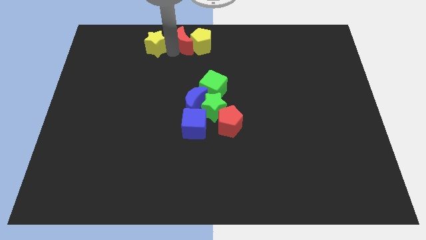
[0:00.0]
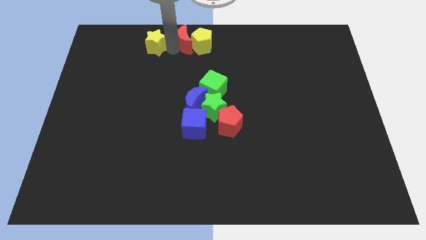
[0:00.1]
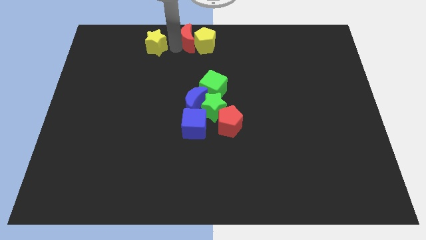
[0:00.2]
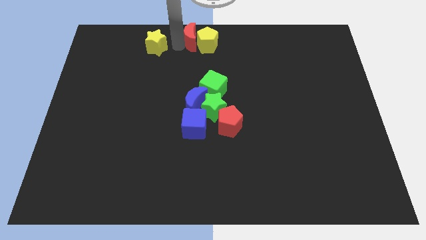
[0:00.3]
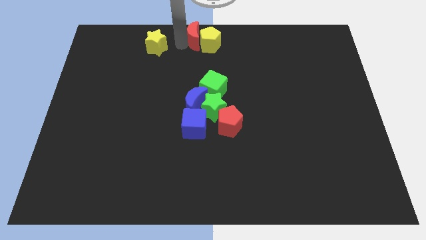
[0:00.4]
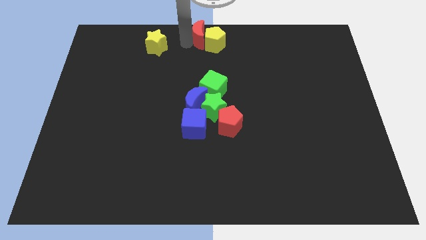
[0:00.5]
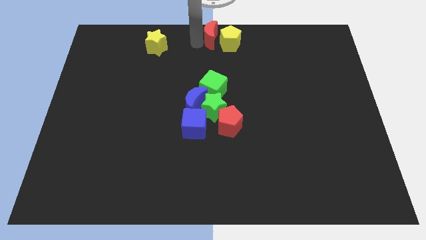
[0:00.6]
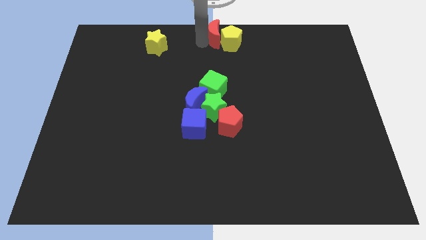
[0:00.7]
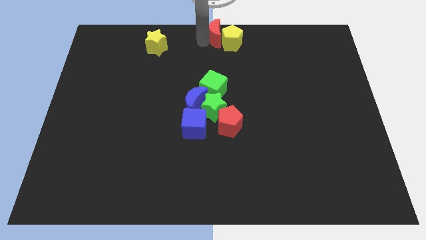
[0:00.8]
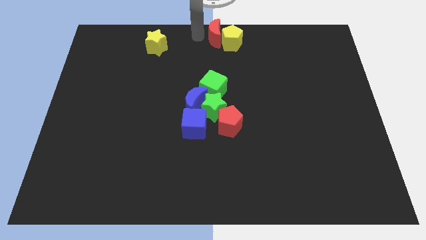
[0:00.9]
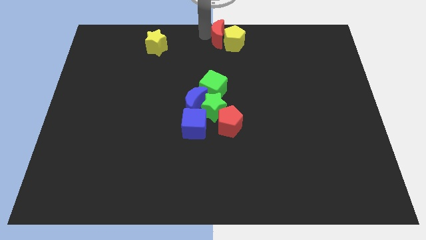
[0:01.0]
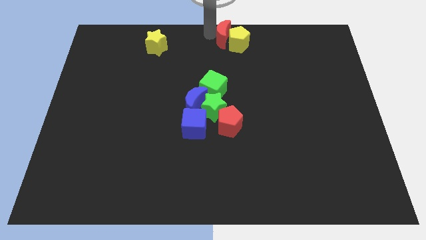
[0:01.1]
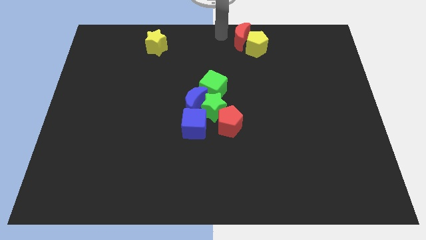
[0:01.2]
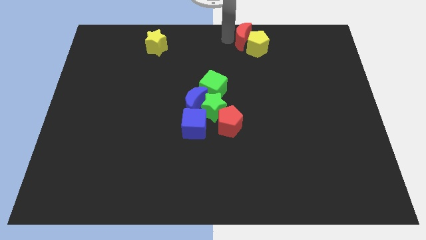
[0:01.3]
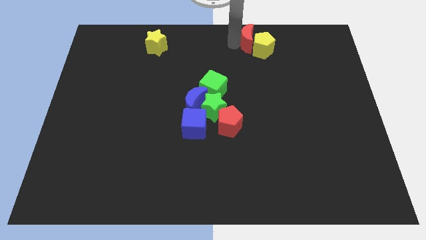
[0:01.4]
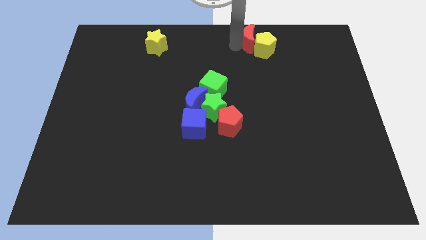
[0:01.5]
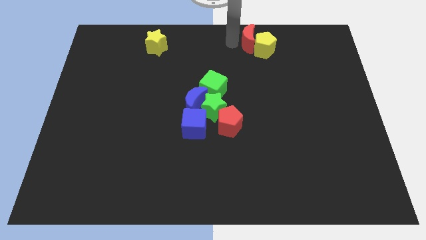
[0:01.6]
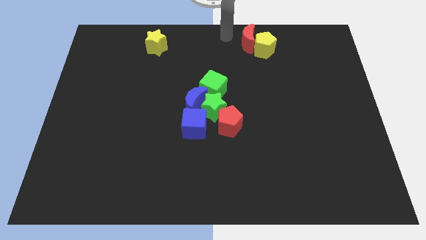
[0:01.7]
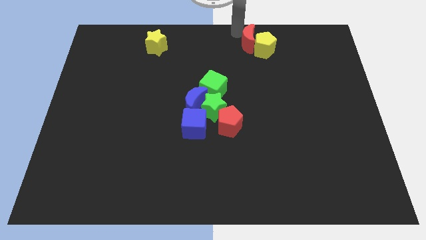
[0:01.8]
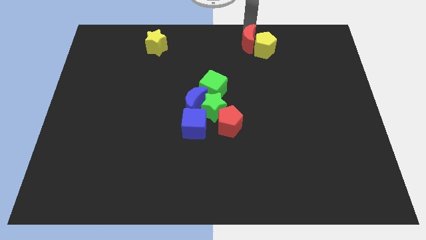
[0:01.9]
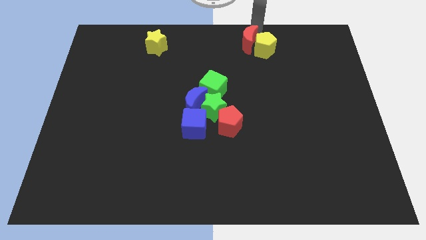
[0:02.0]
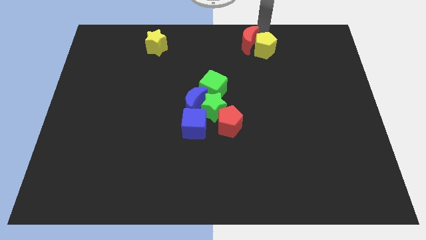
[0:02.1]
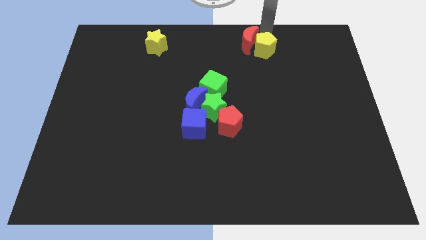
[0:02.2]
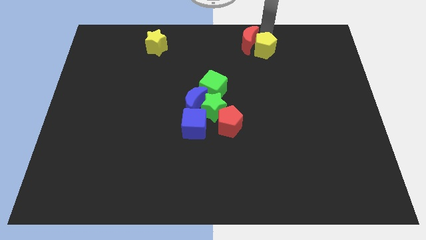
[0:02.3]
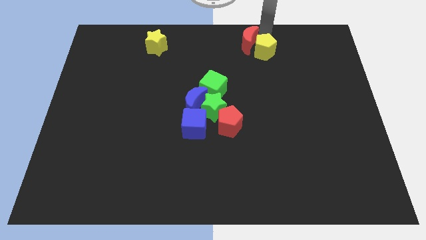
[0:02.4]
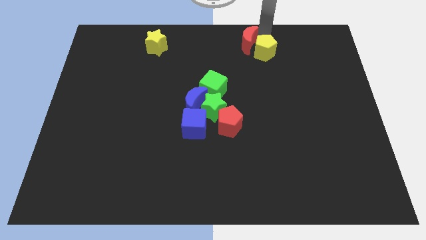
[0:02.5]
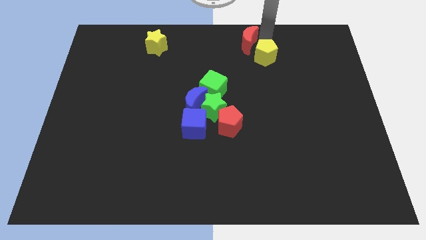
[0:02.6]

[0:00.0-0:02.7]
move the red moon and yellow pentagon slightly right

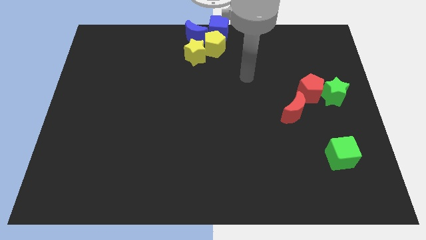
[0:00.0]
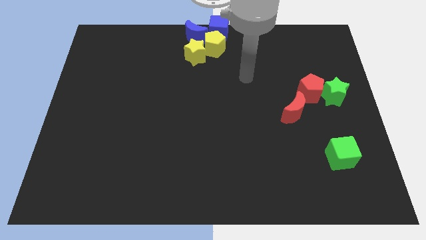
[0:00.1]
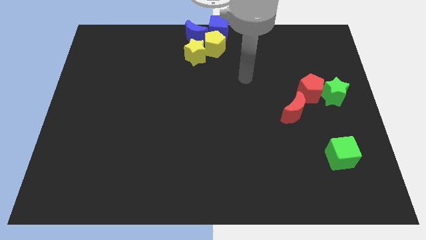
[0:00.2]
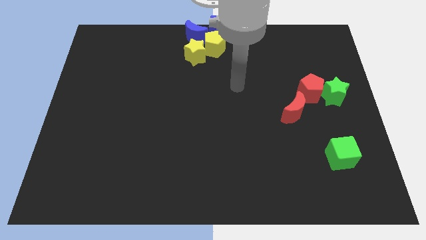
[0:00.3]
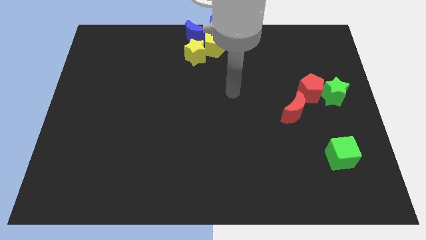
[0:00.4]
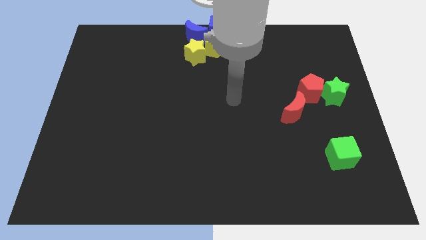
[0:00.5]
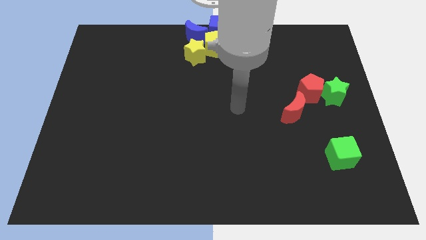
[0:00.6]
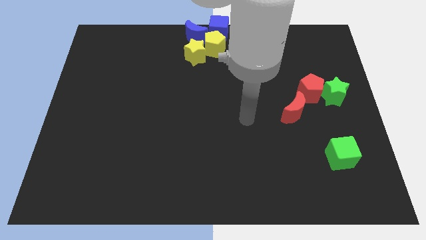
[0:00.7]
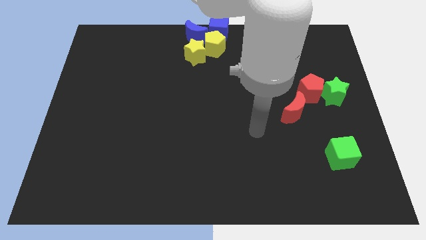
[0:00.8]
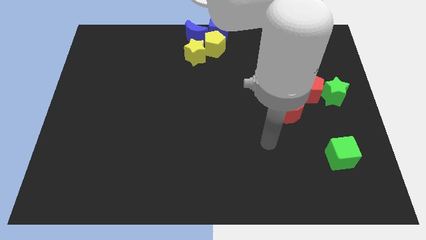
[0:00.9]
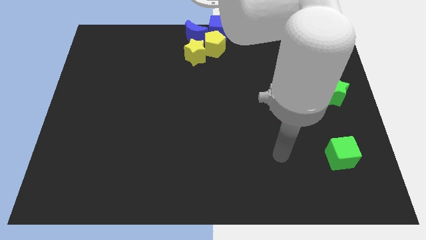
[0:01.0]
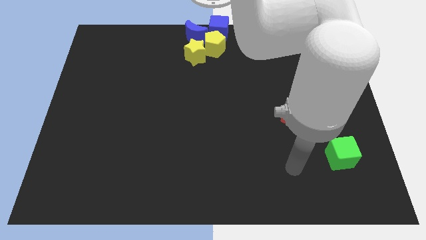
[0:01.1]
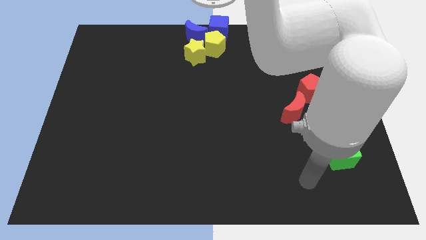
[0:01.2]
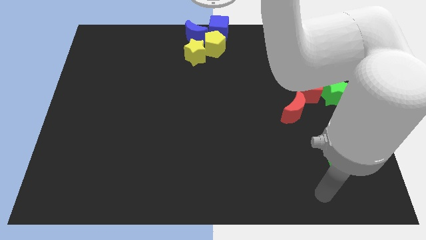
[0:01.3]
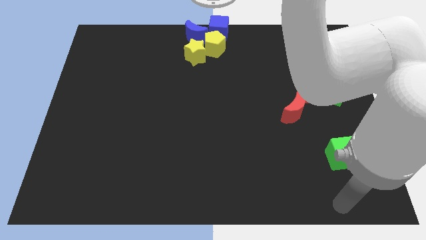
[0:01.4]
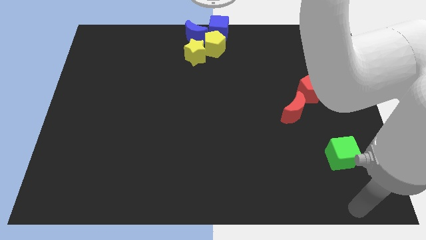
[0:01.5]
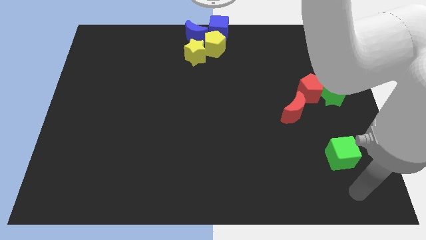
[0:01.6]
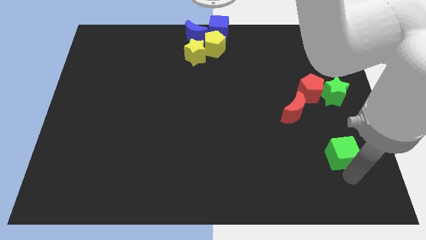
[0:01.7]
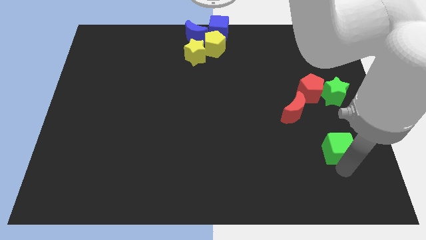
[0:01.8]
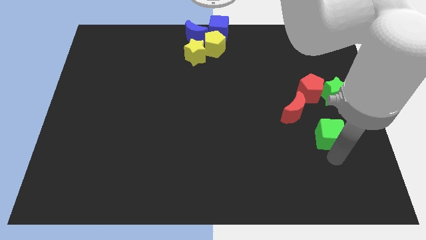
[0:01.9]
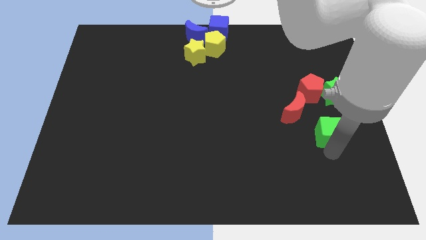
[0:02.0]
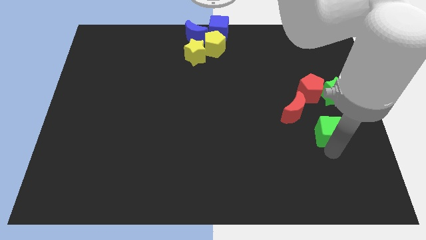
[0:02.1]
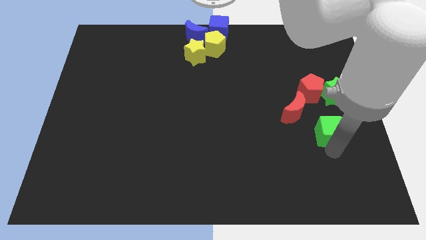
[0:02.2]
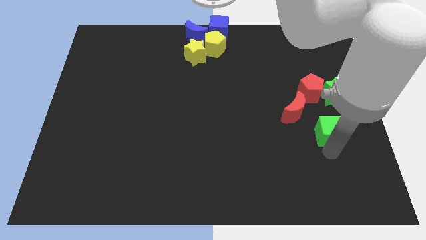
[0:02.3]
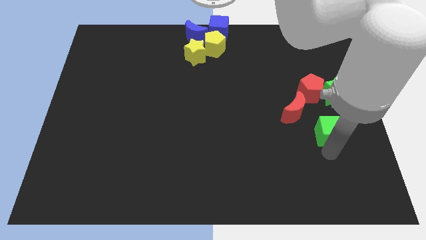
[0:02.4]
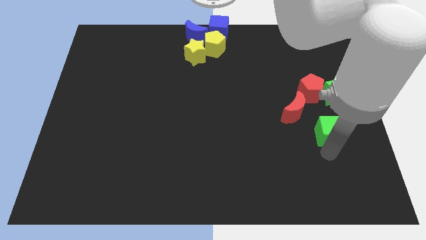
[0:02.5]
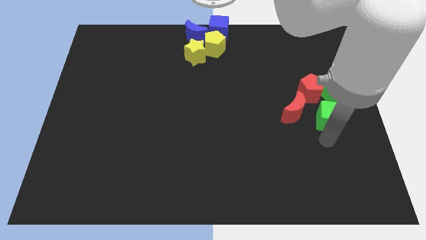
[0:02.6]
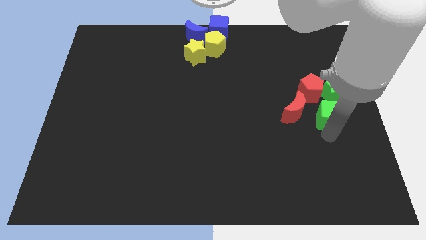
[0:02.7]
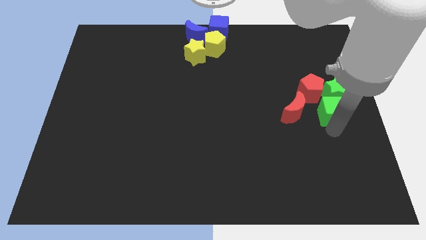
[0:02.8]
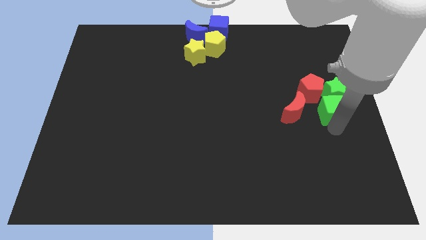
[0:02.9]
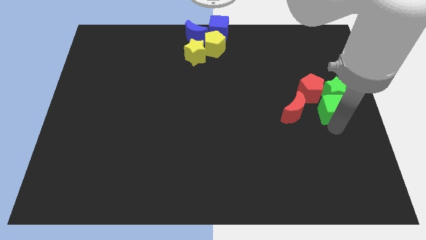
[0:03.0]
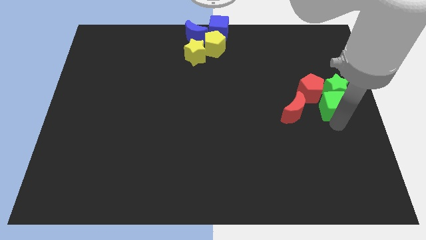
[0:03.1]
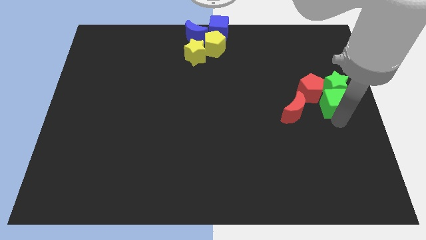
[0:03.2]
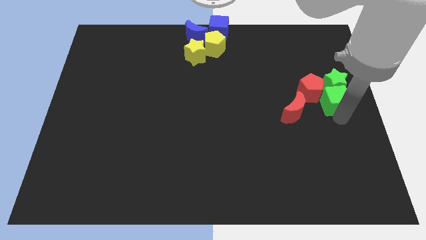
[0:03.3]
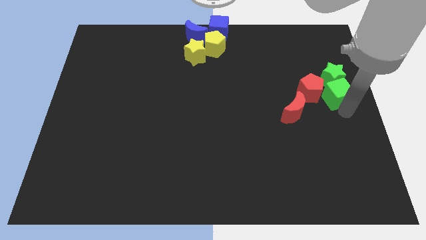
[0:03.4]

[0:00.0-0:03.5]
push the green cube below the green star

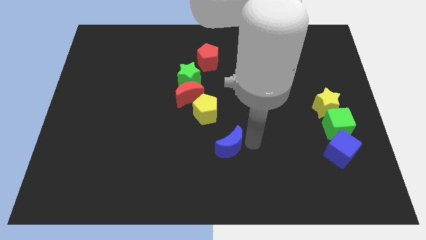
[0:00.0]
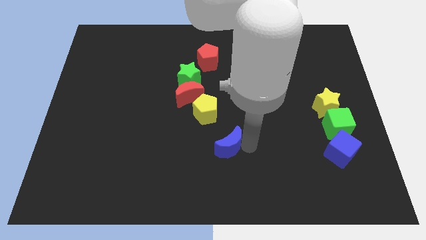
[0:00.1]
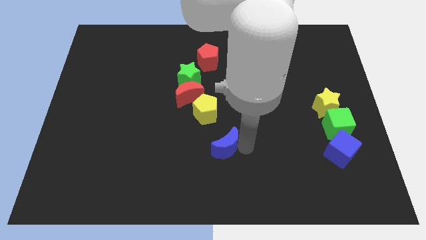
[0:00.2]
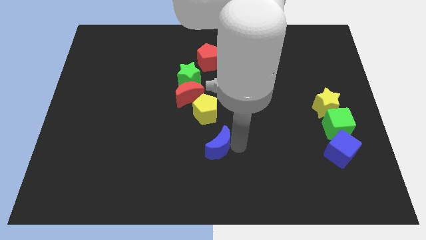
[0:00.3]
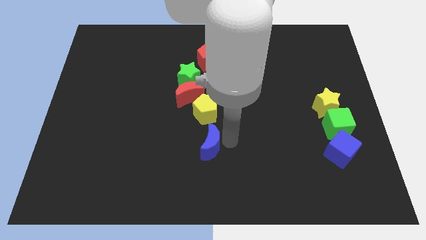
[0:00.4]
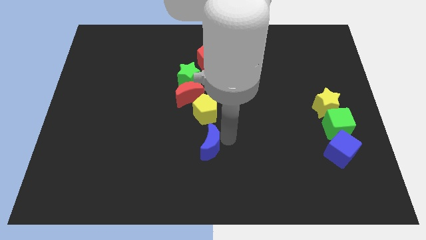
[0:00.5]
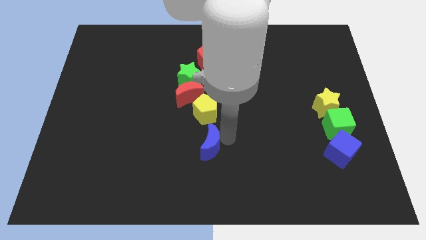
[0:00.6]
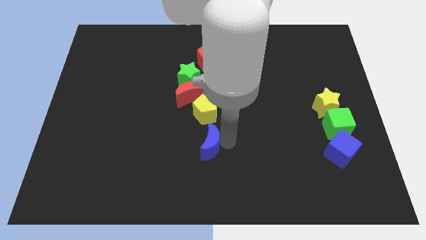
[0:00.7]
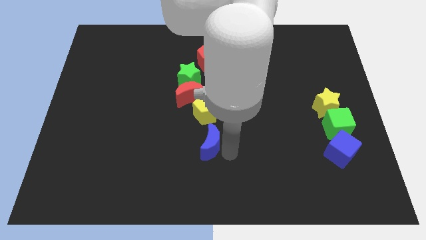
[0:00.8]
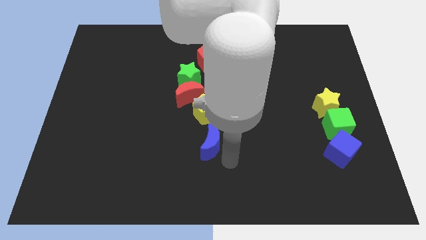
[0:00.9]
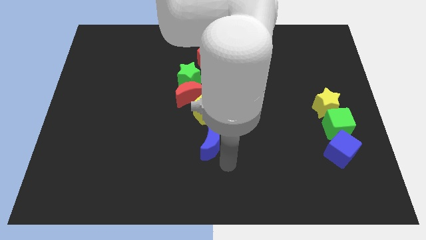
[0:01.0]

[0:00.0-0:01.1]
move the blue crescent below the yellow pentagon

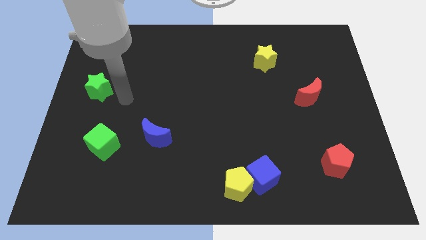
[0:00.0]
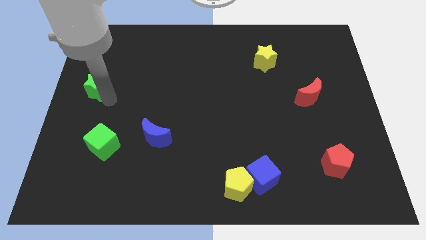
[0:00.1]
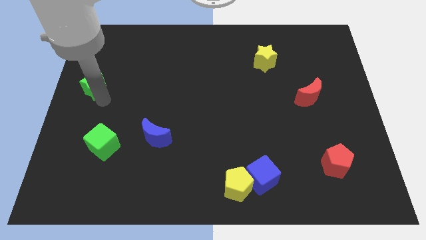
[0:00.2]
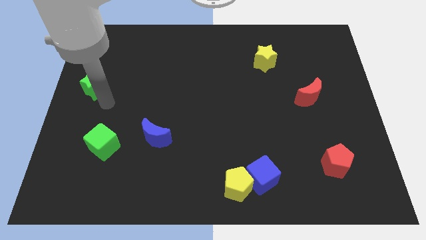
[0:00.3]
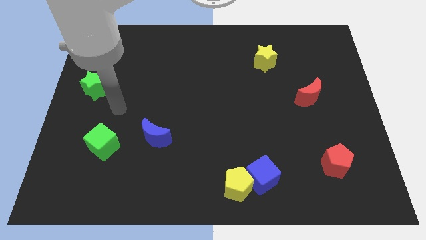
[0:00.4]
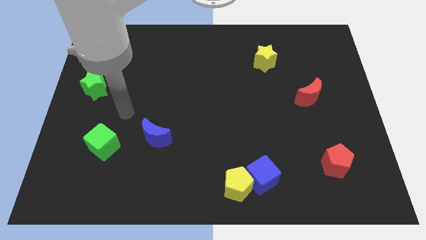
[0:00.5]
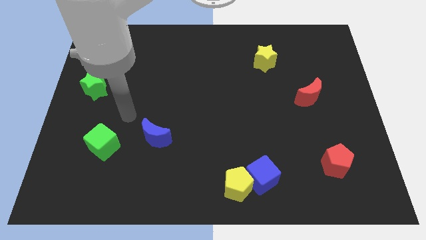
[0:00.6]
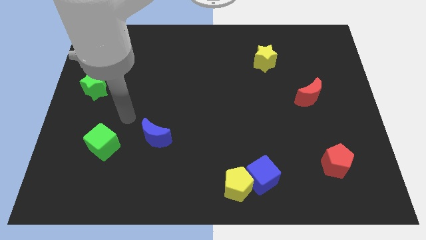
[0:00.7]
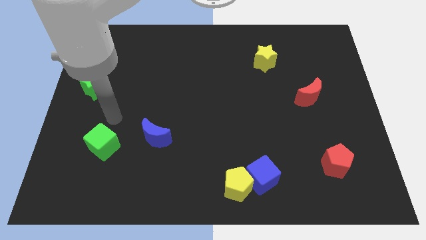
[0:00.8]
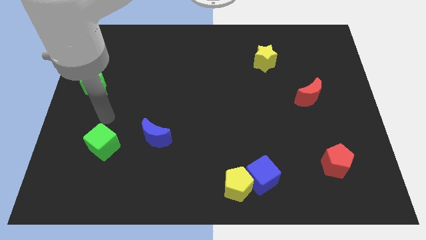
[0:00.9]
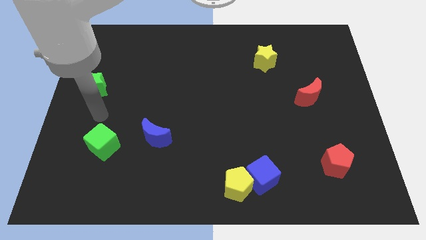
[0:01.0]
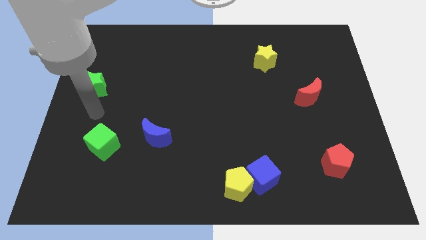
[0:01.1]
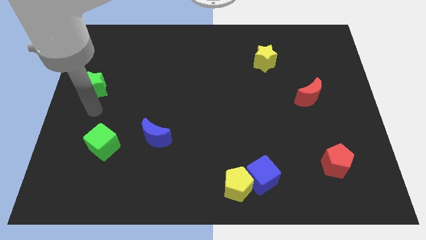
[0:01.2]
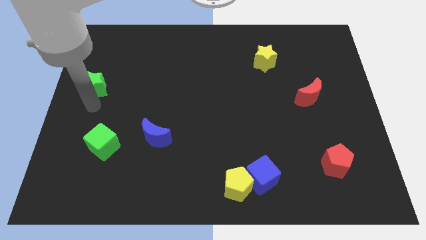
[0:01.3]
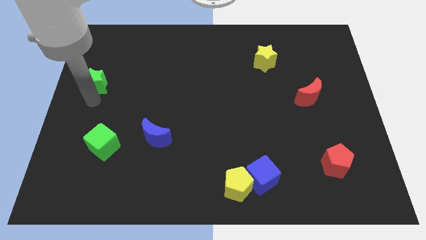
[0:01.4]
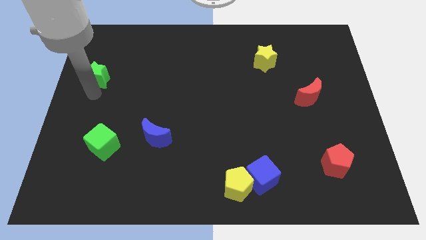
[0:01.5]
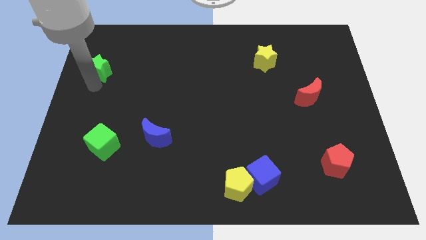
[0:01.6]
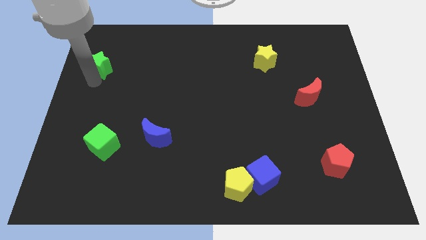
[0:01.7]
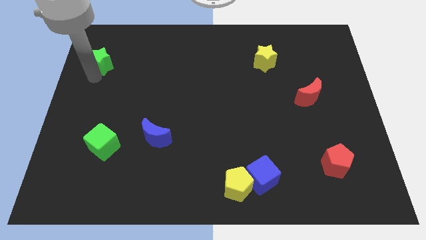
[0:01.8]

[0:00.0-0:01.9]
push the green star slightly up
